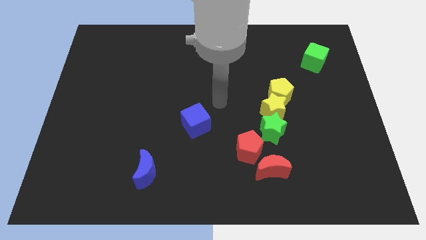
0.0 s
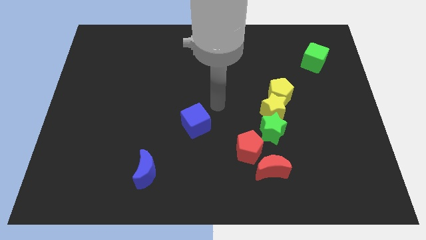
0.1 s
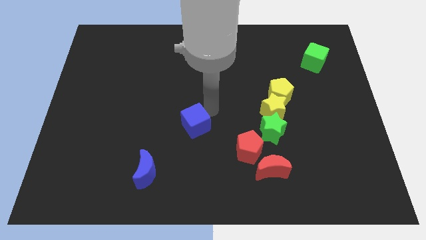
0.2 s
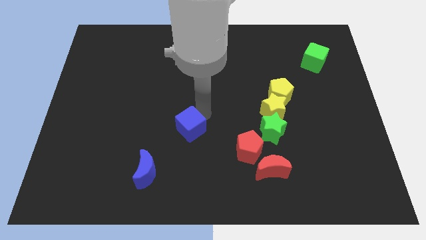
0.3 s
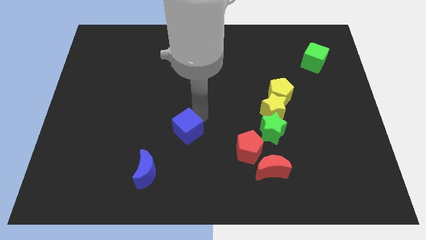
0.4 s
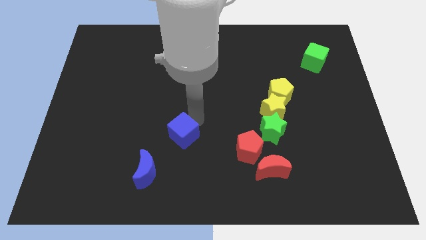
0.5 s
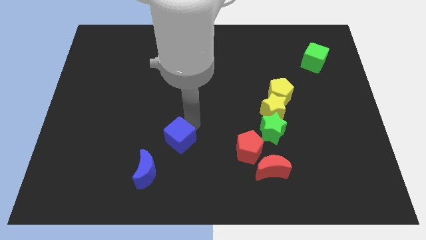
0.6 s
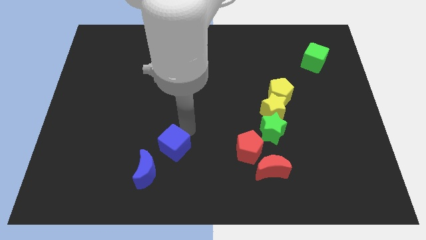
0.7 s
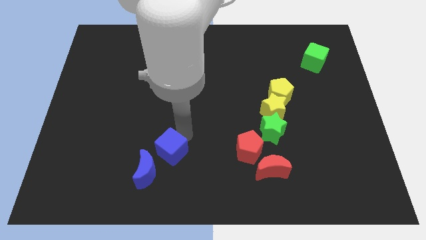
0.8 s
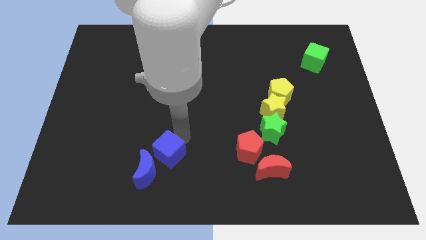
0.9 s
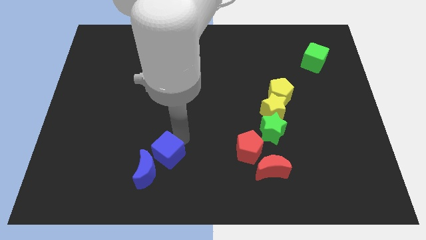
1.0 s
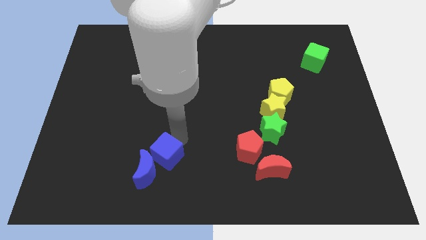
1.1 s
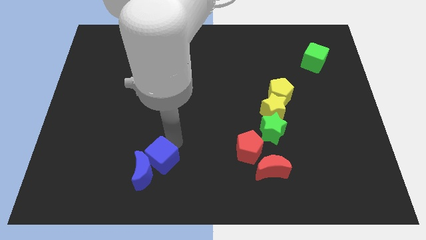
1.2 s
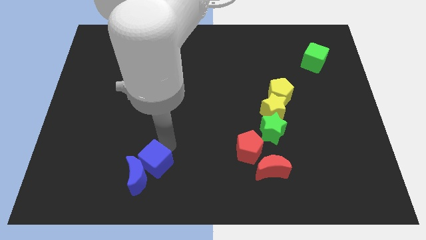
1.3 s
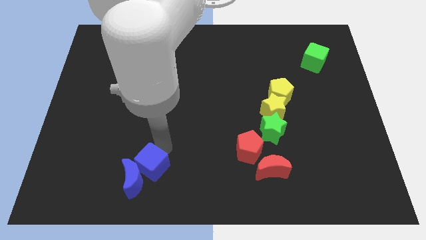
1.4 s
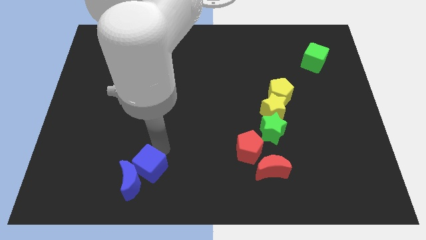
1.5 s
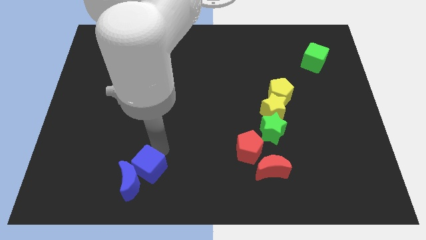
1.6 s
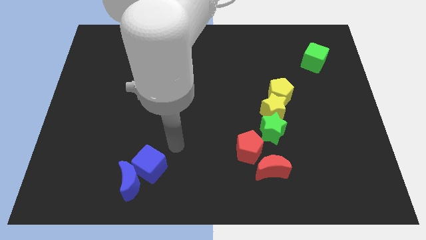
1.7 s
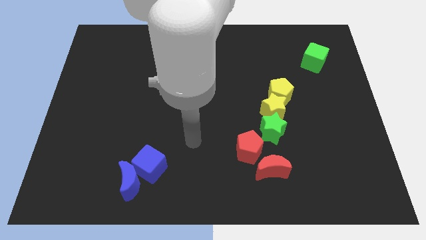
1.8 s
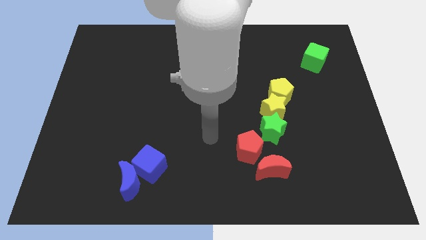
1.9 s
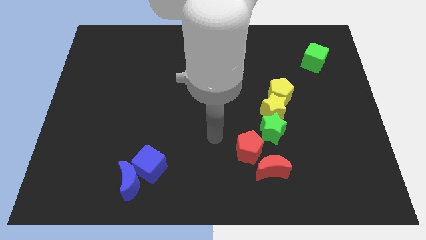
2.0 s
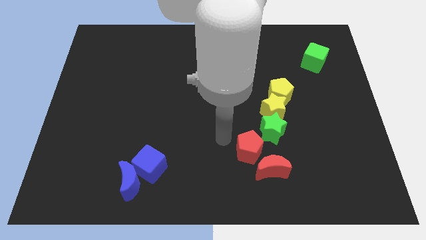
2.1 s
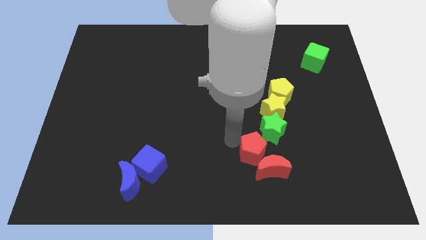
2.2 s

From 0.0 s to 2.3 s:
move the blue cube into the blue crescent

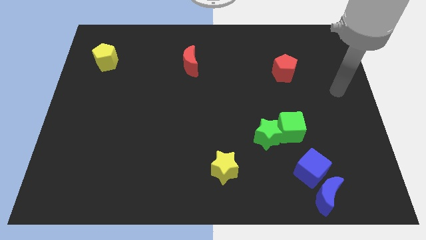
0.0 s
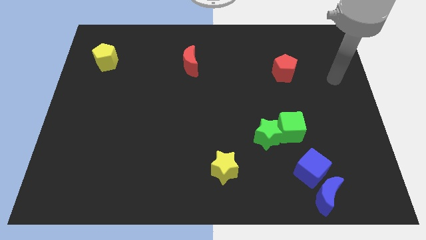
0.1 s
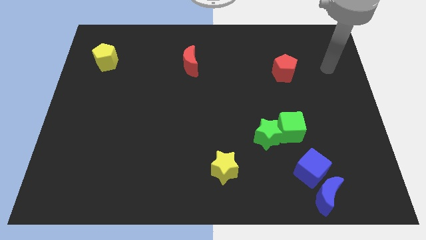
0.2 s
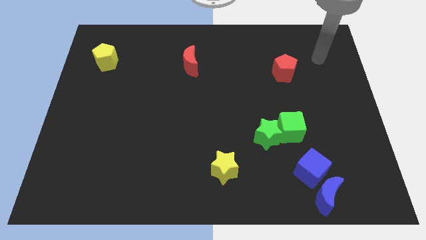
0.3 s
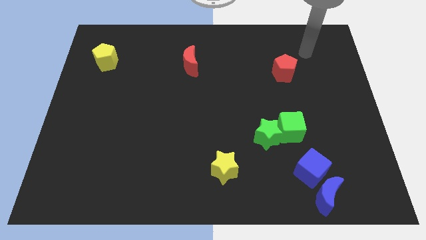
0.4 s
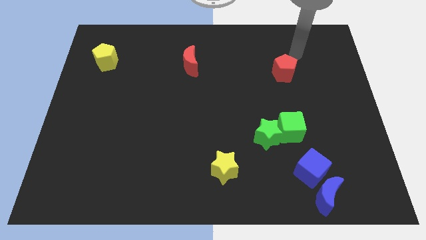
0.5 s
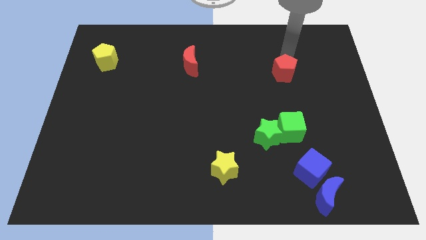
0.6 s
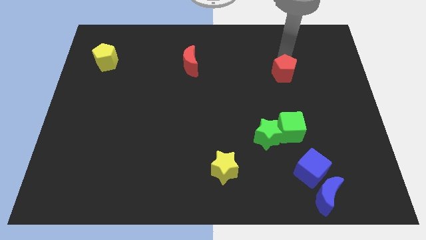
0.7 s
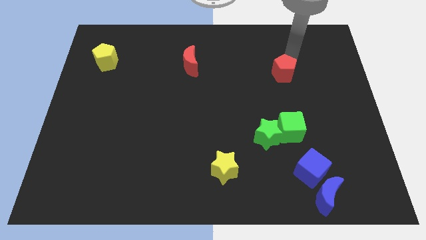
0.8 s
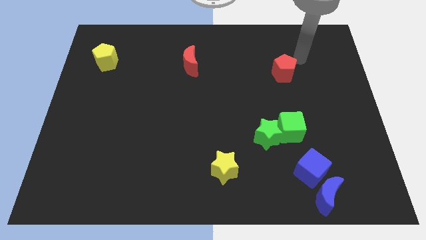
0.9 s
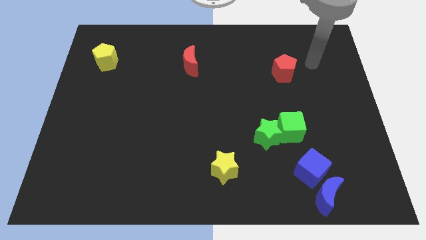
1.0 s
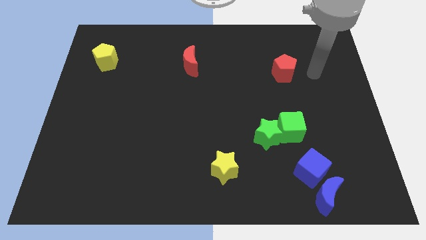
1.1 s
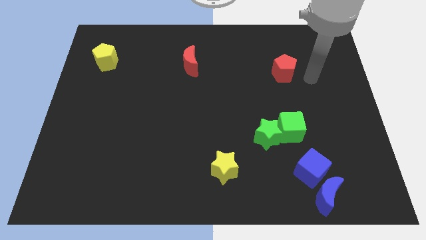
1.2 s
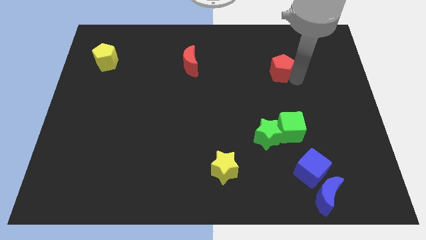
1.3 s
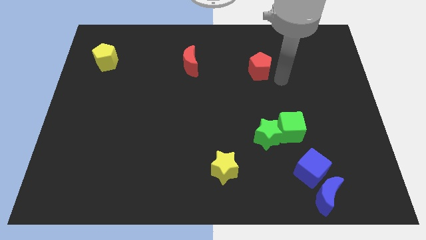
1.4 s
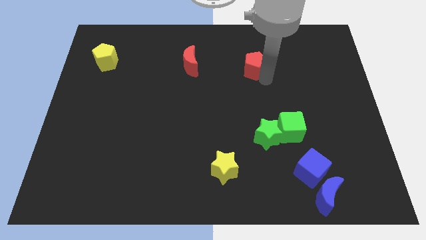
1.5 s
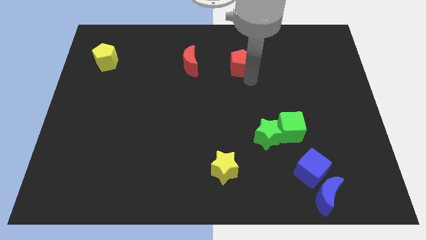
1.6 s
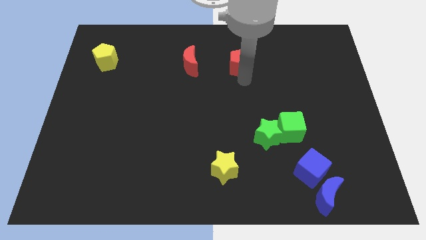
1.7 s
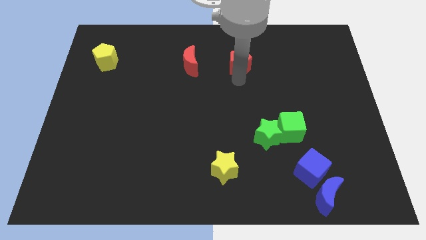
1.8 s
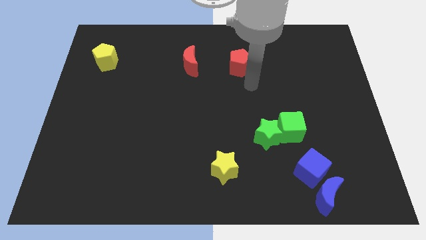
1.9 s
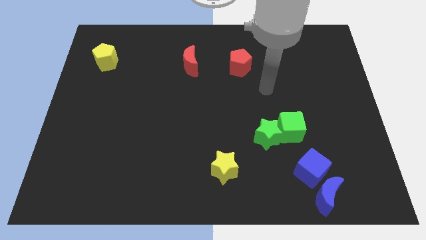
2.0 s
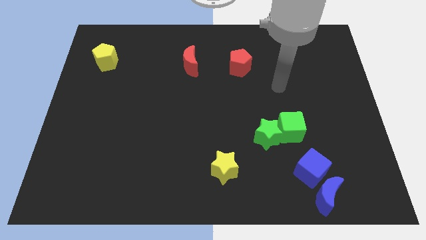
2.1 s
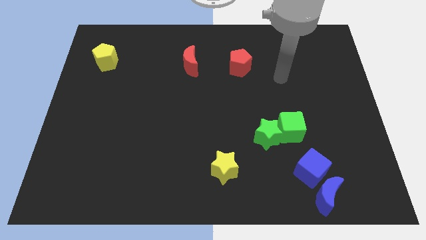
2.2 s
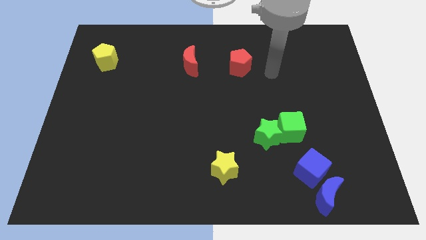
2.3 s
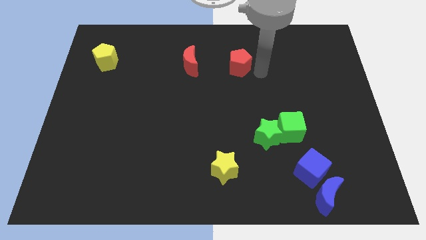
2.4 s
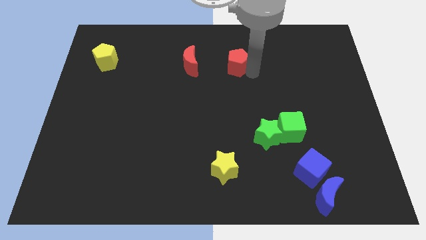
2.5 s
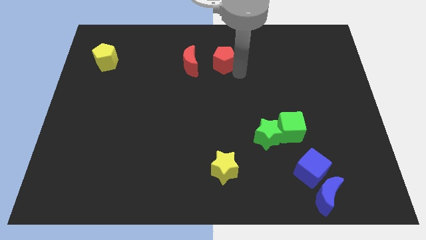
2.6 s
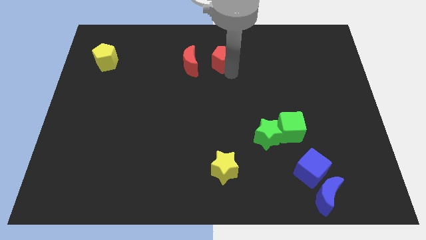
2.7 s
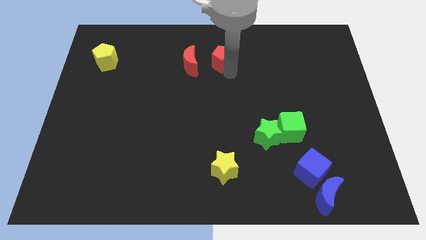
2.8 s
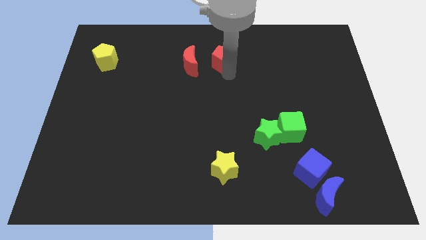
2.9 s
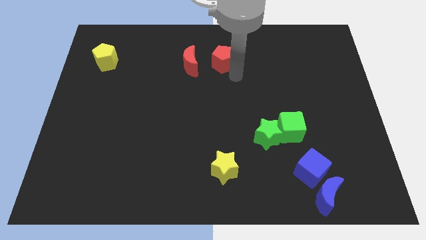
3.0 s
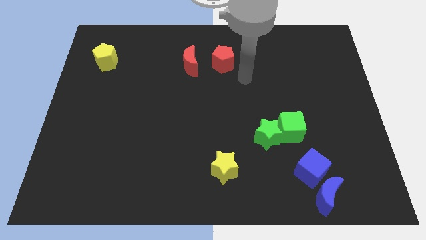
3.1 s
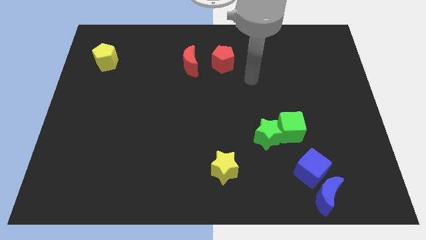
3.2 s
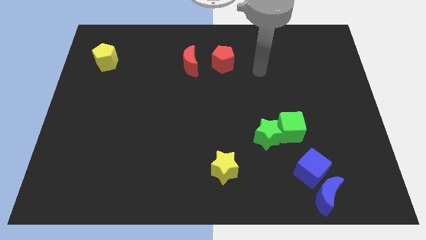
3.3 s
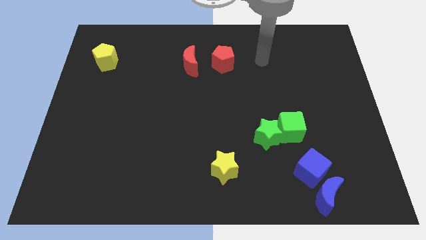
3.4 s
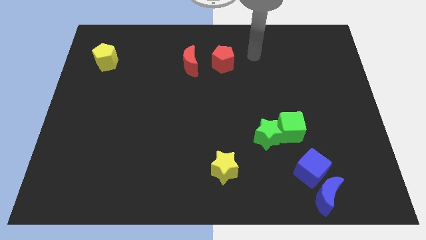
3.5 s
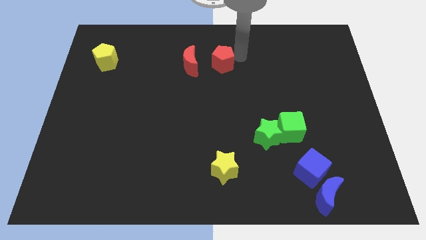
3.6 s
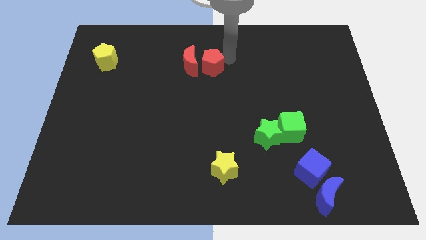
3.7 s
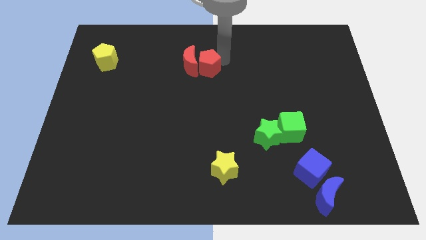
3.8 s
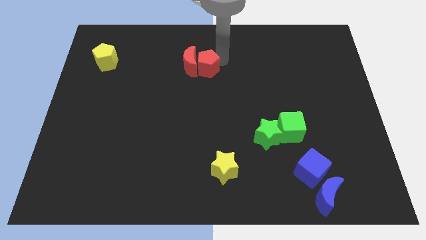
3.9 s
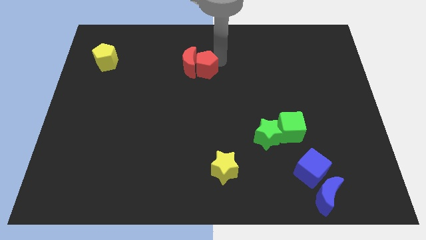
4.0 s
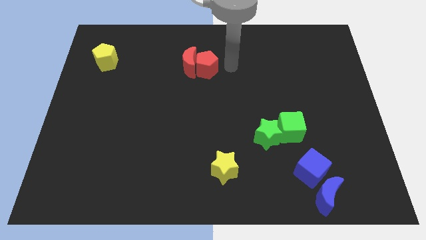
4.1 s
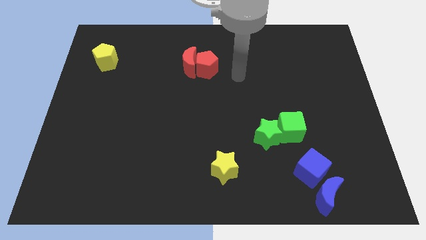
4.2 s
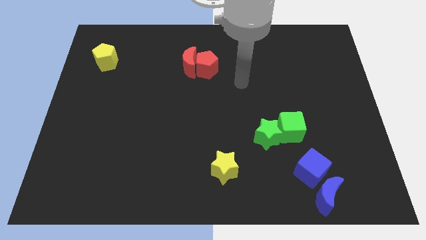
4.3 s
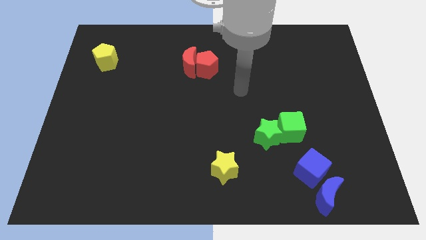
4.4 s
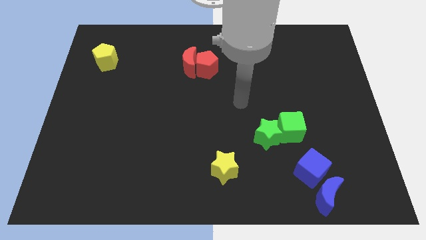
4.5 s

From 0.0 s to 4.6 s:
push the red pentagon into the red crescent

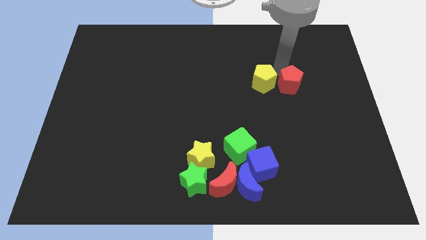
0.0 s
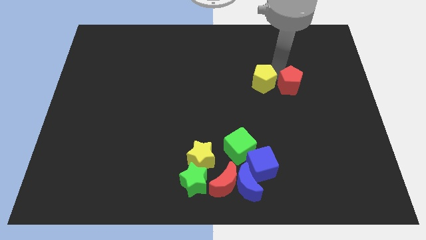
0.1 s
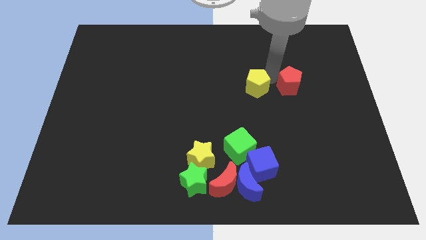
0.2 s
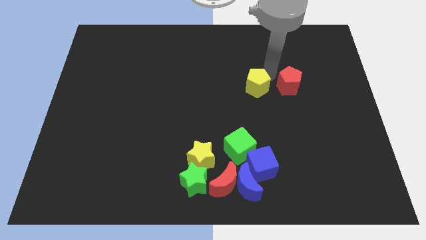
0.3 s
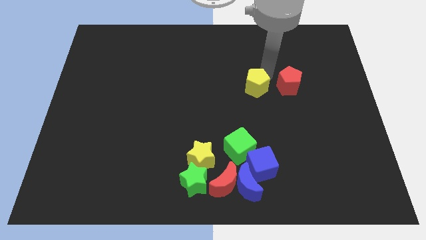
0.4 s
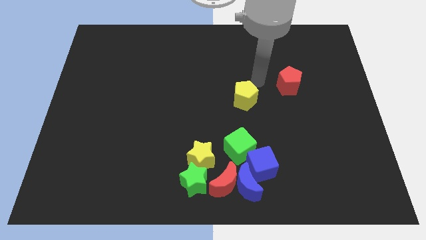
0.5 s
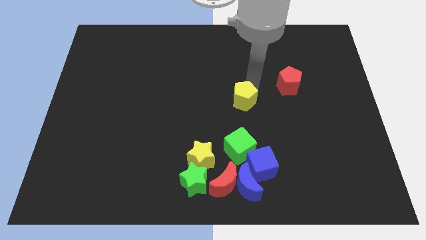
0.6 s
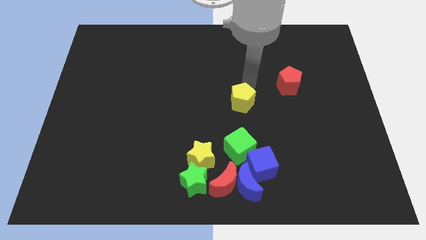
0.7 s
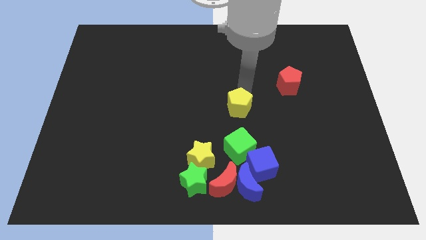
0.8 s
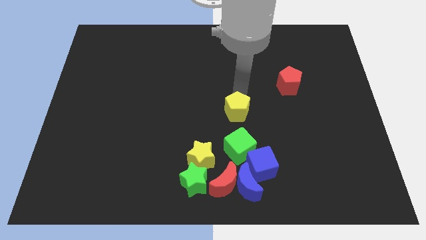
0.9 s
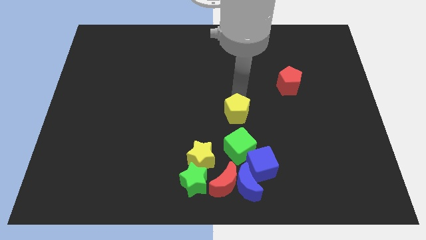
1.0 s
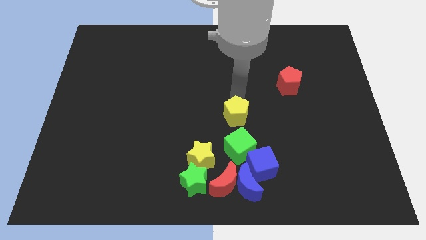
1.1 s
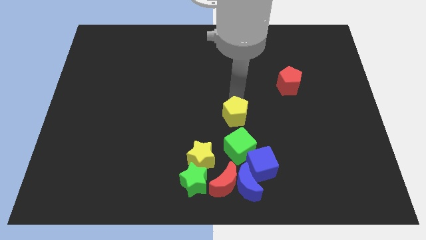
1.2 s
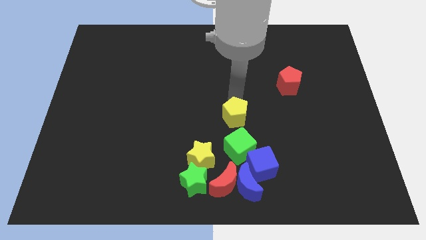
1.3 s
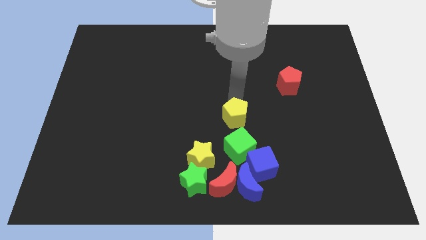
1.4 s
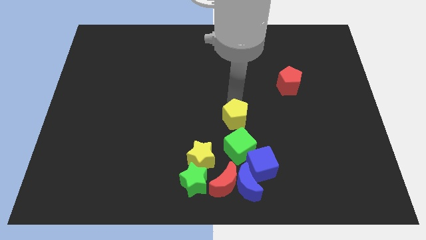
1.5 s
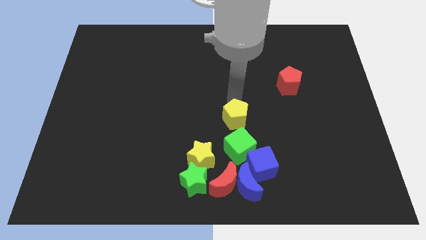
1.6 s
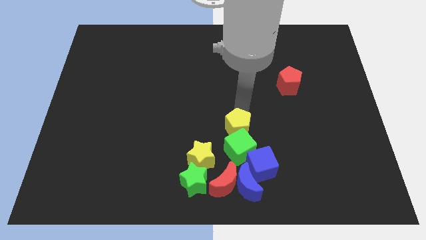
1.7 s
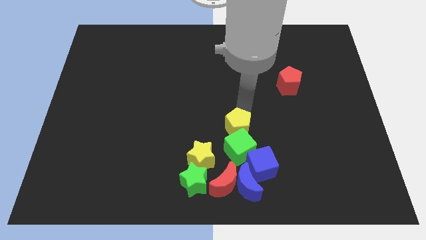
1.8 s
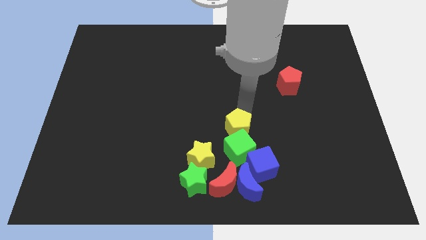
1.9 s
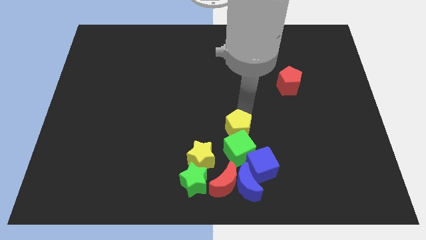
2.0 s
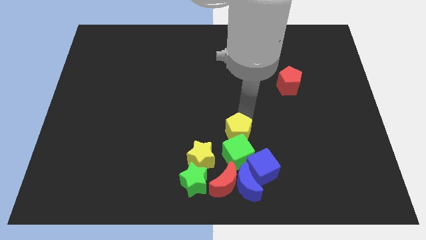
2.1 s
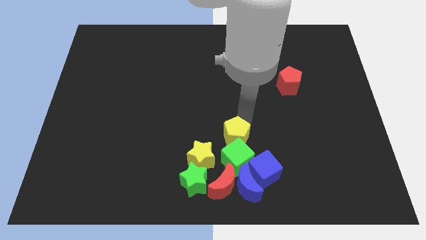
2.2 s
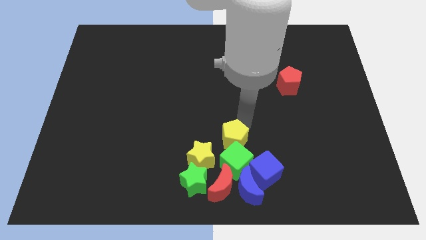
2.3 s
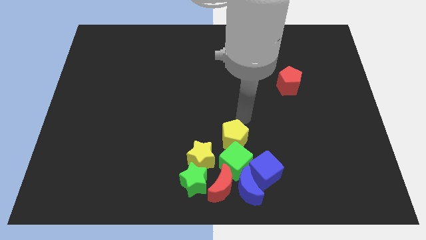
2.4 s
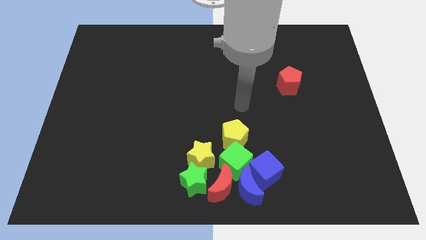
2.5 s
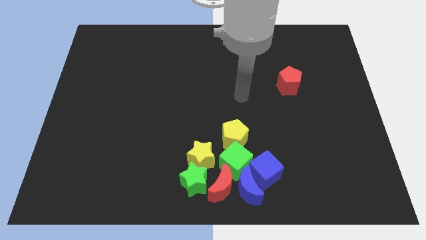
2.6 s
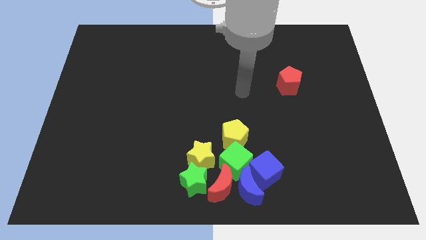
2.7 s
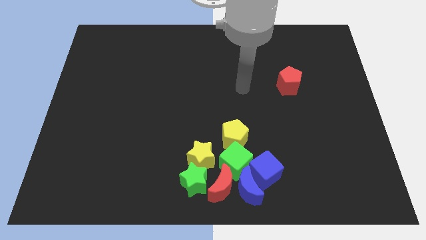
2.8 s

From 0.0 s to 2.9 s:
move the yellow pentagon above the green cube
